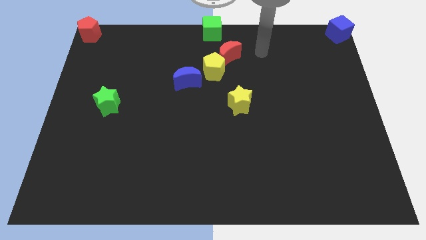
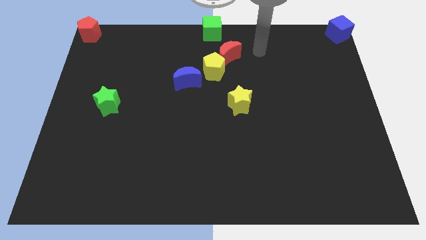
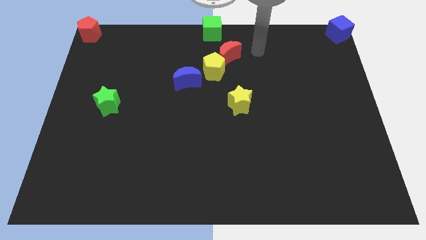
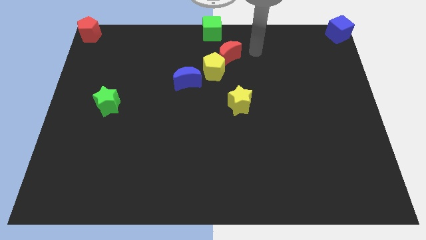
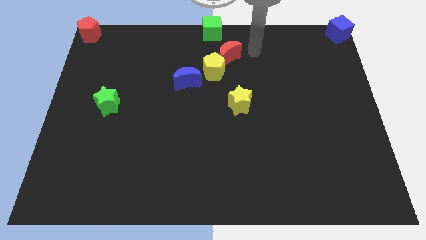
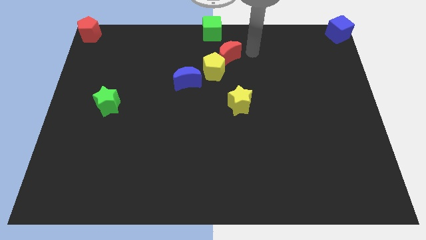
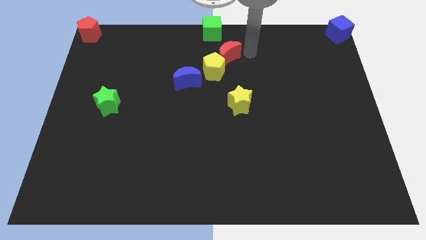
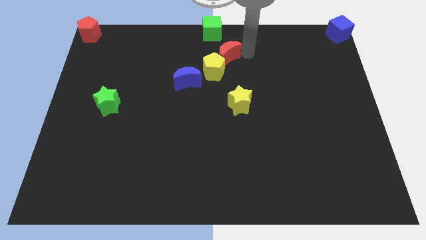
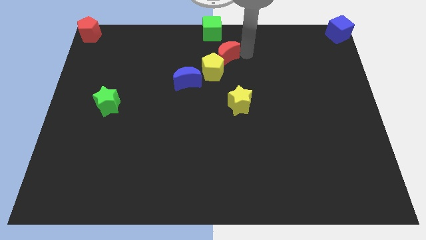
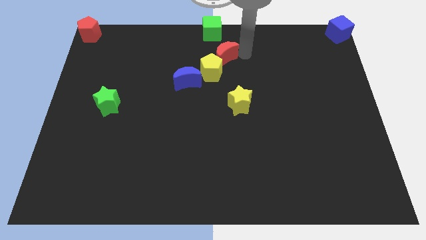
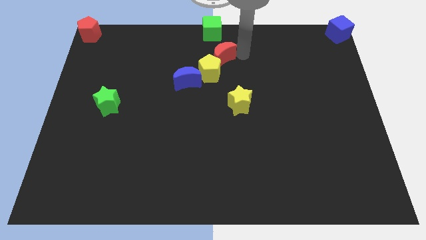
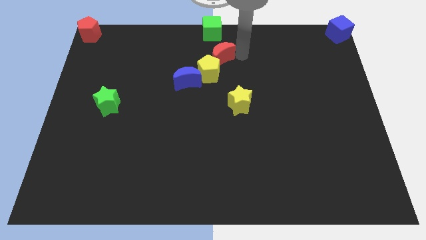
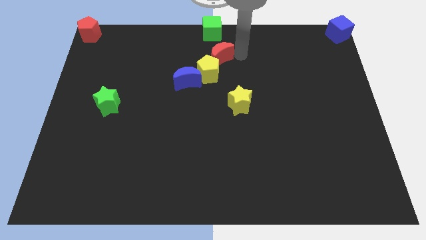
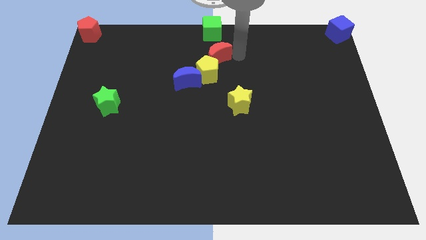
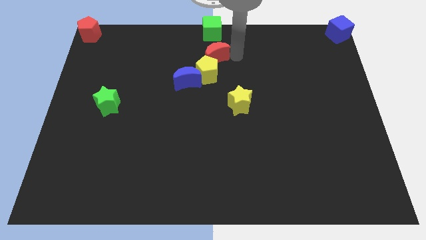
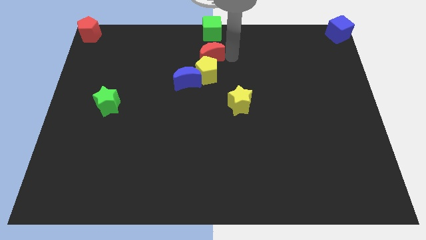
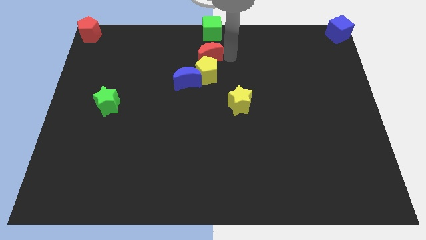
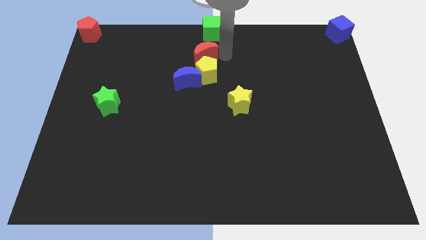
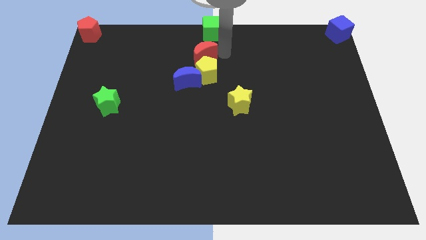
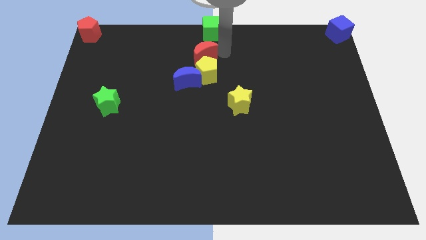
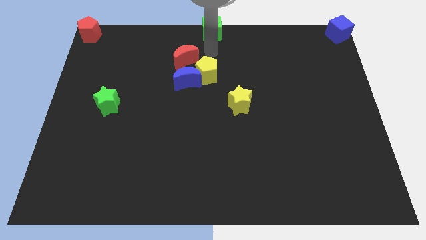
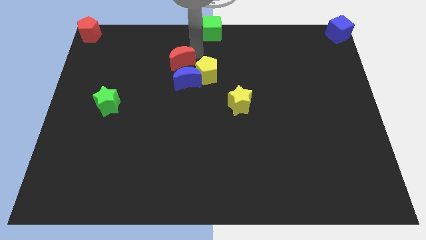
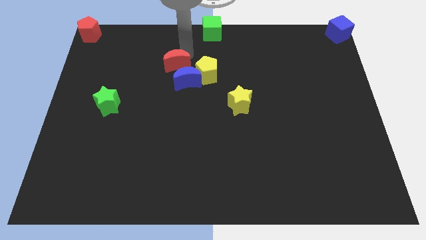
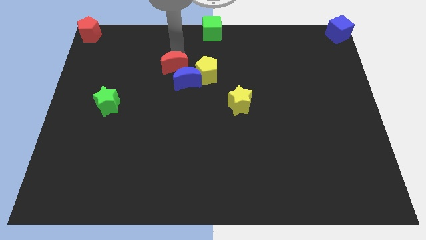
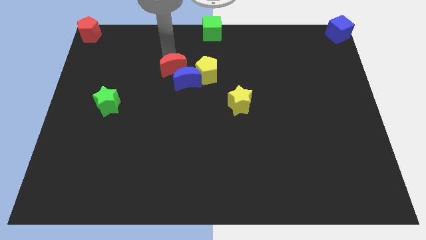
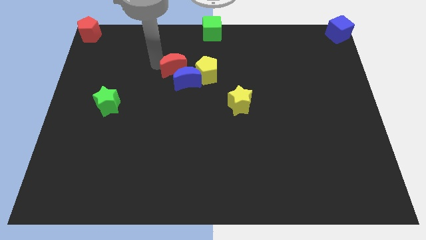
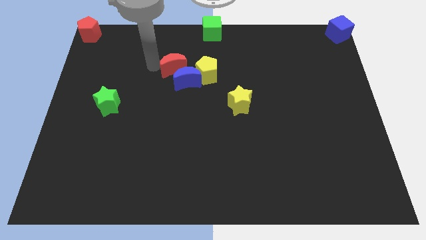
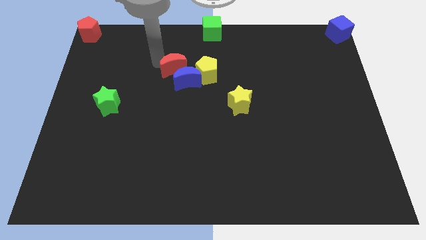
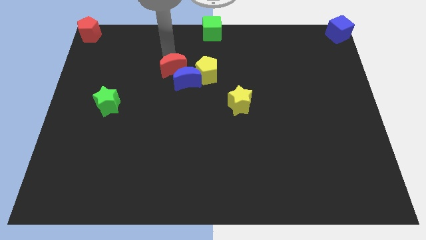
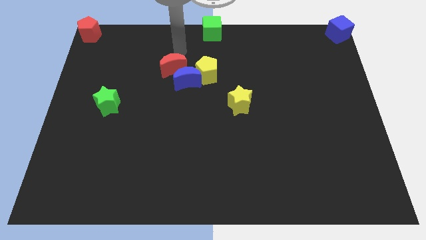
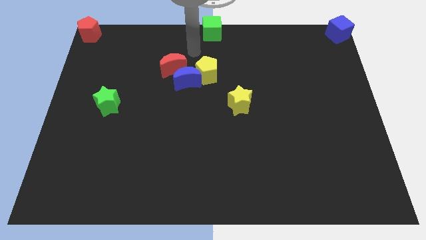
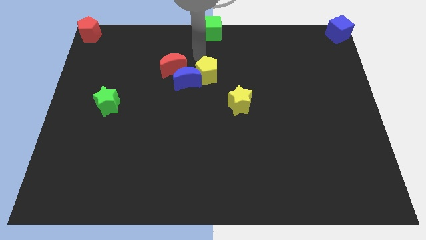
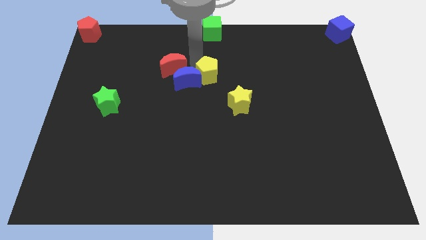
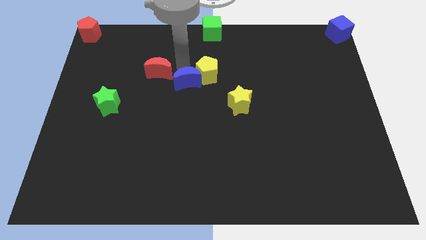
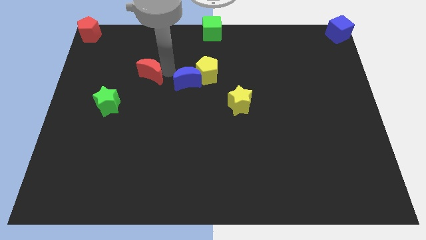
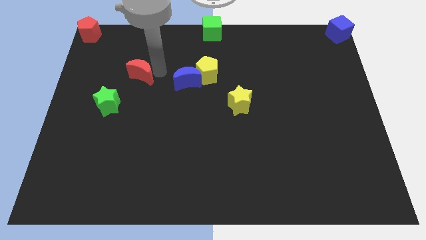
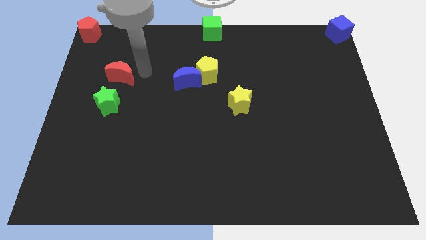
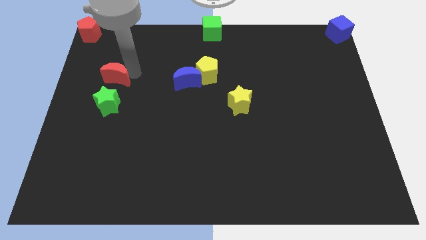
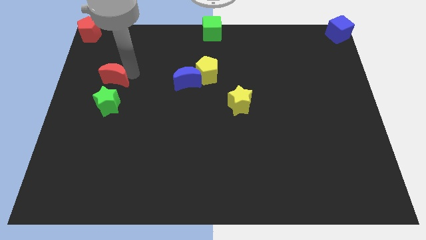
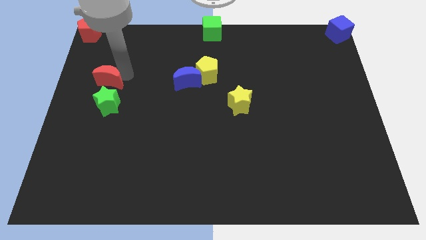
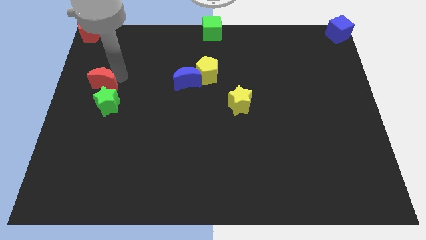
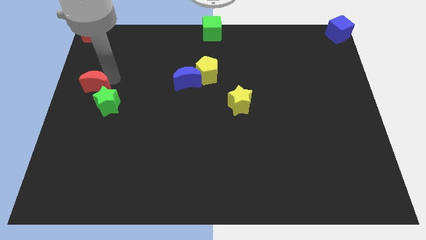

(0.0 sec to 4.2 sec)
move the red crescent above the green star

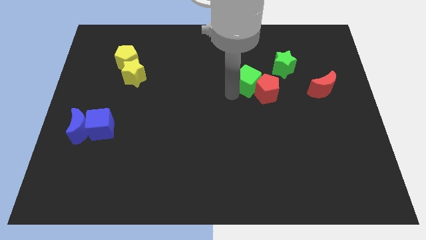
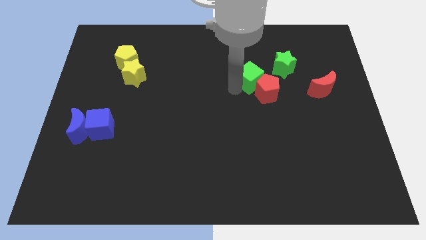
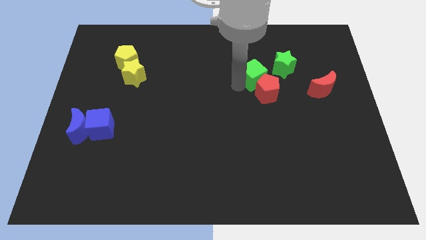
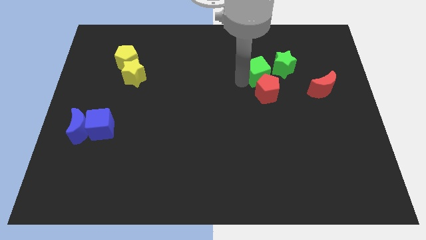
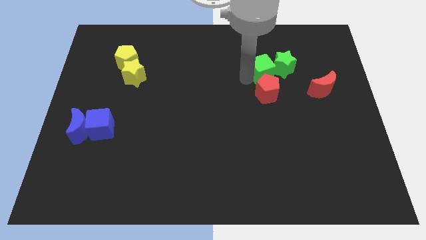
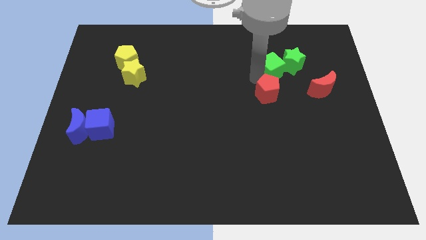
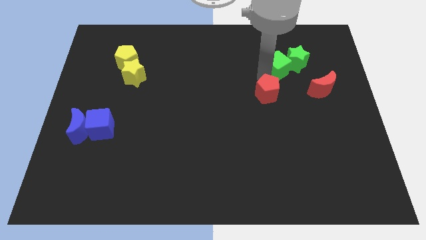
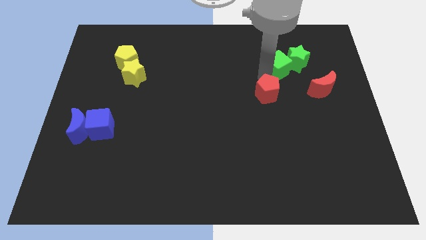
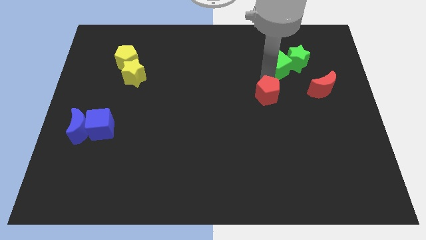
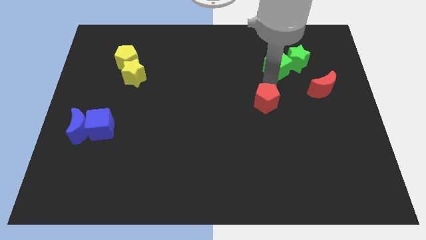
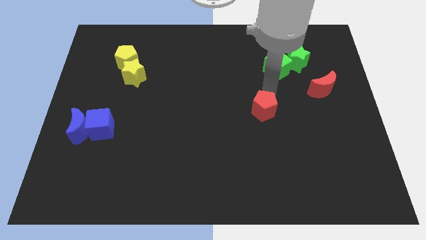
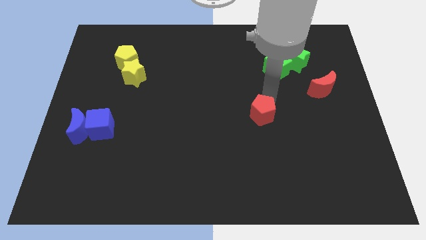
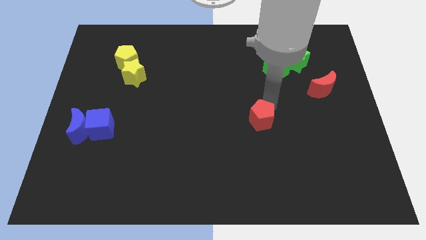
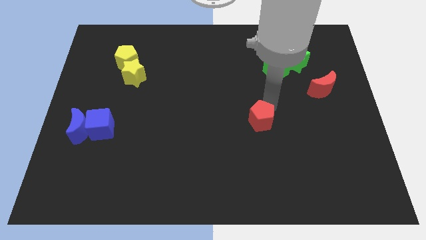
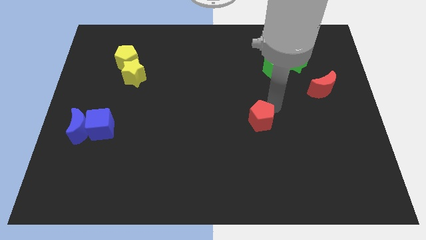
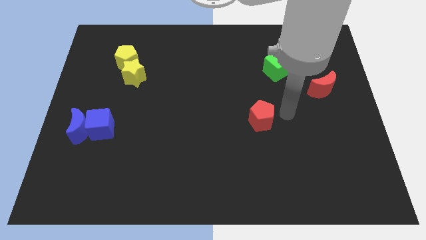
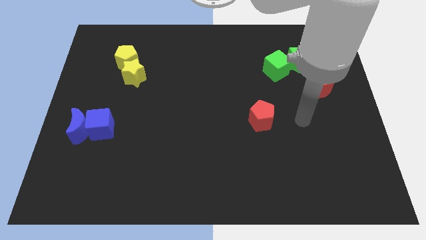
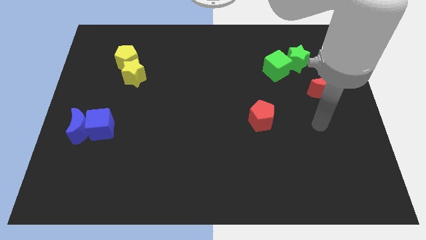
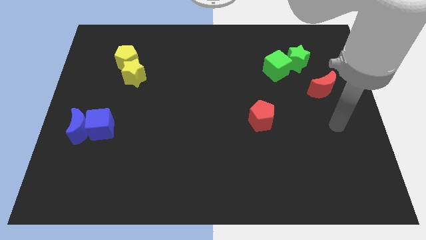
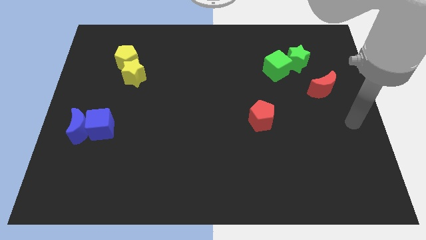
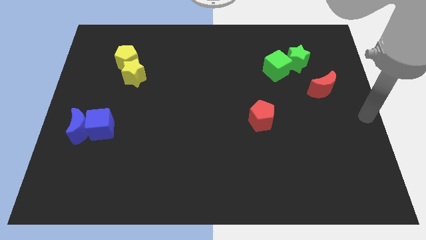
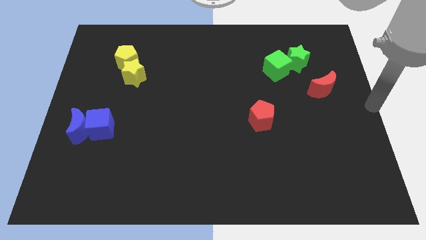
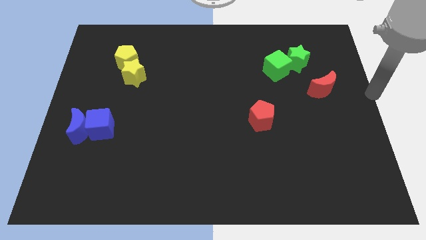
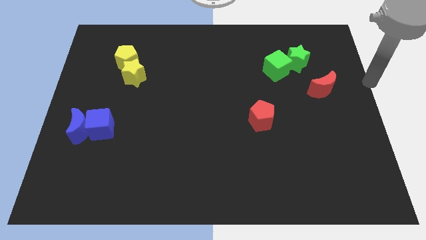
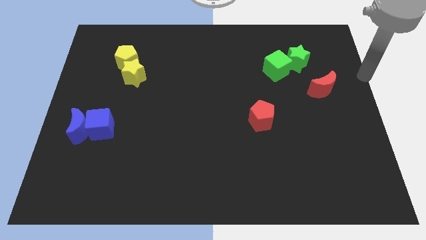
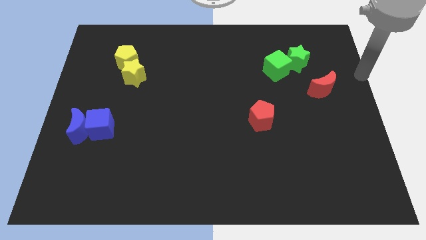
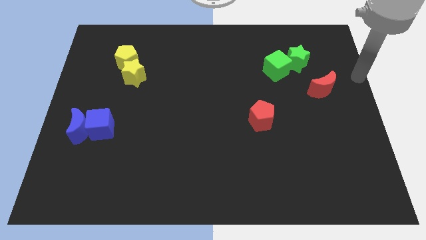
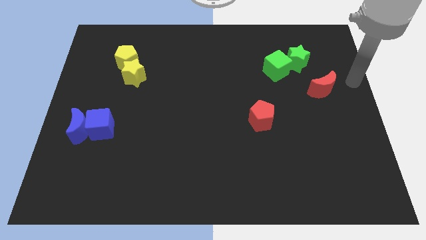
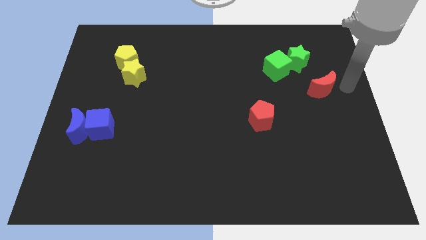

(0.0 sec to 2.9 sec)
push the green blocks and red pentagon in opposite directions

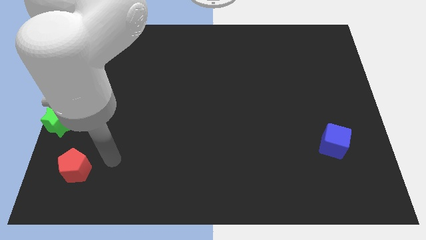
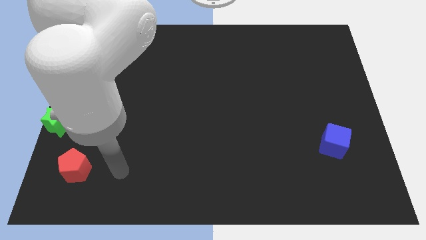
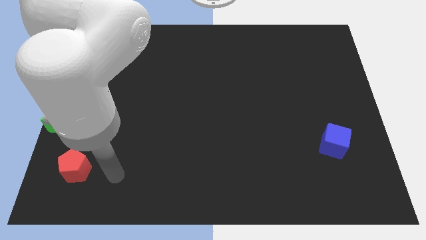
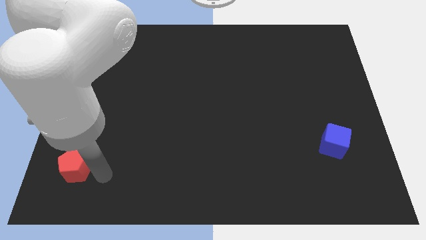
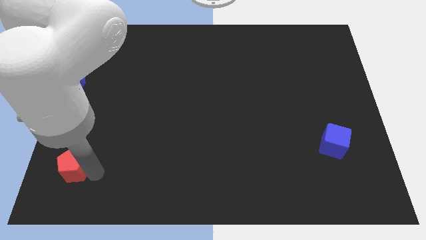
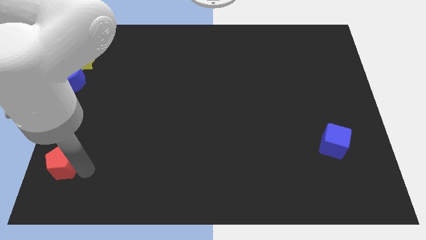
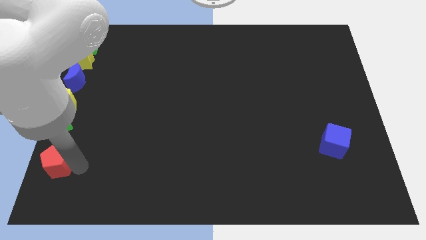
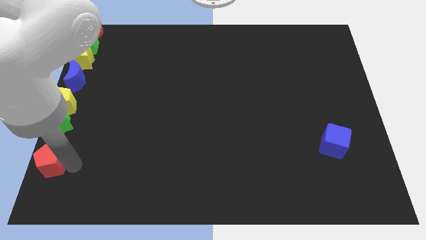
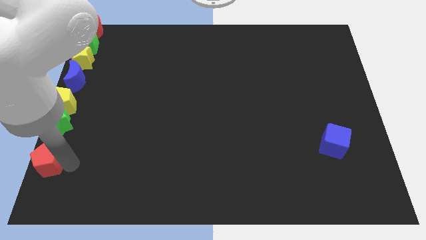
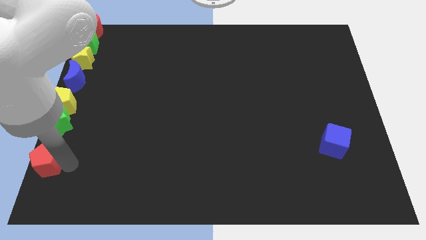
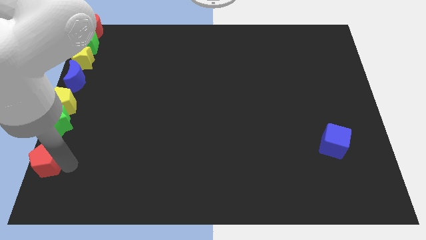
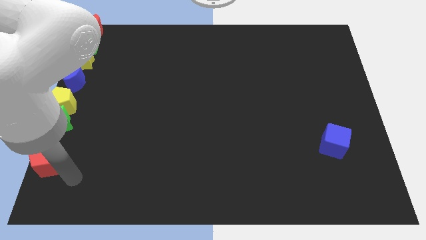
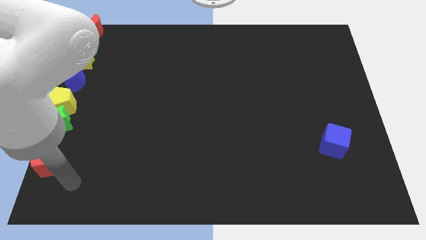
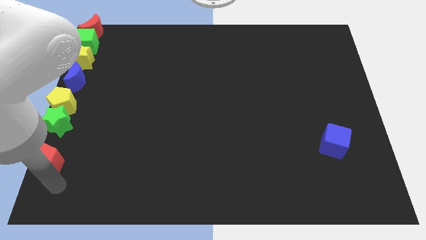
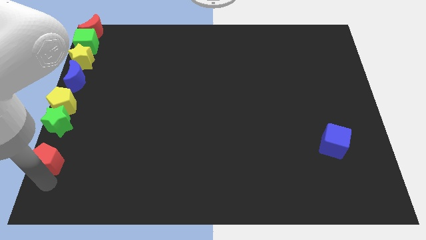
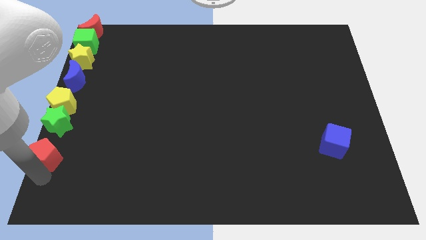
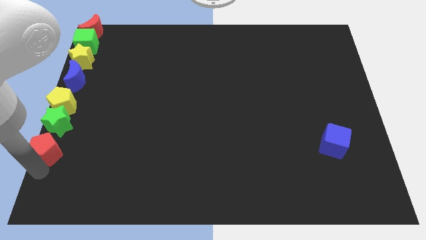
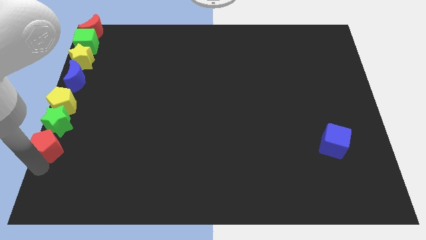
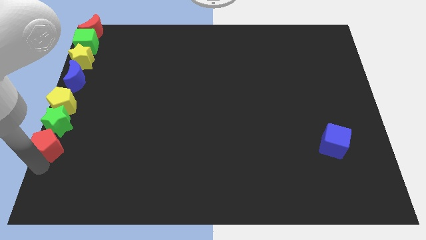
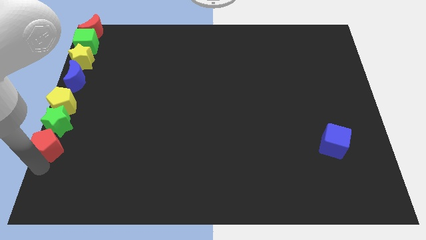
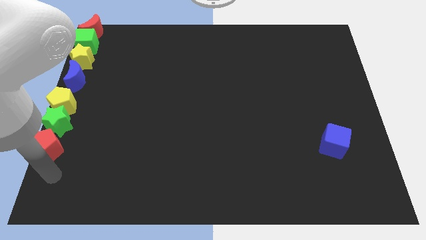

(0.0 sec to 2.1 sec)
arrange the red pentagon at the bottom of the green star
